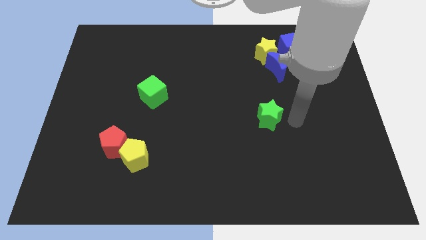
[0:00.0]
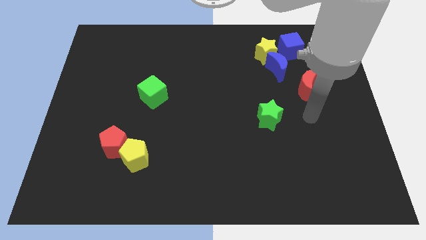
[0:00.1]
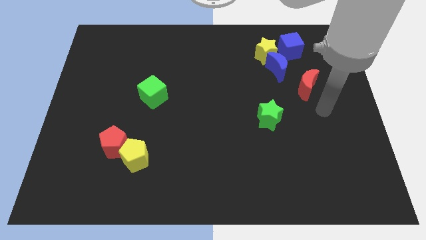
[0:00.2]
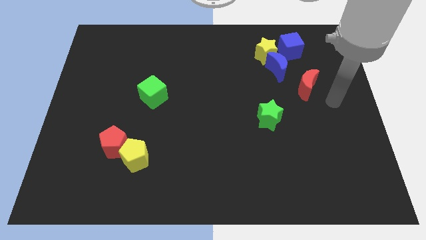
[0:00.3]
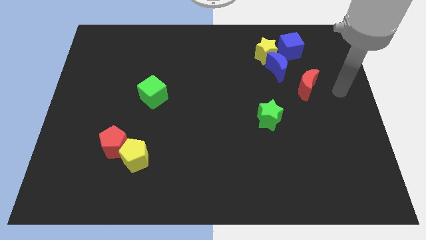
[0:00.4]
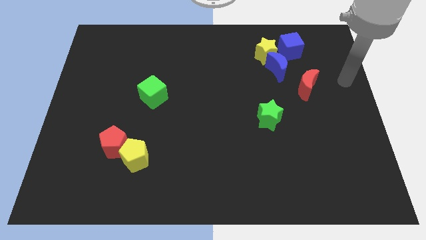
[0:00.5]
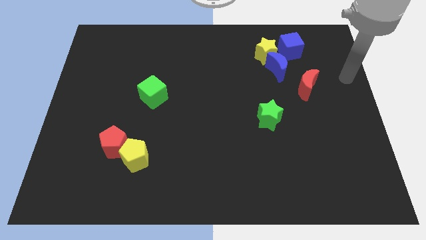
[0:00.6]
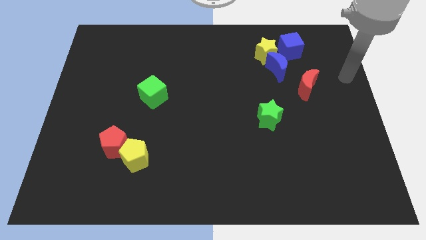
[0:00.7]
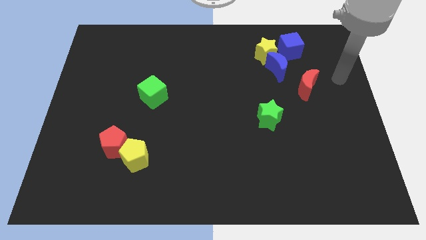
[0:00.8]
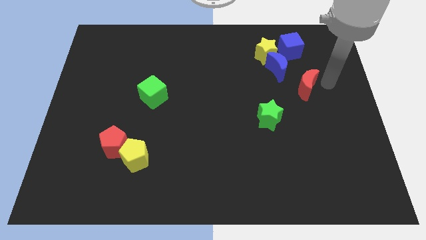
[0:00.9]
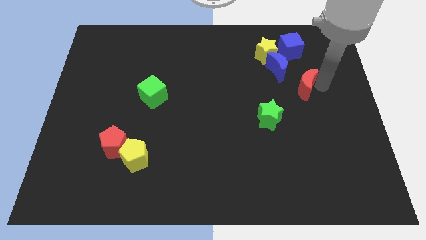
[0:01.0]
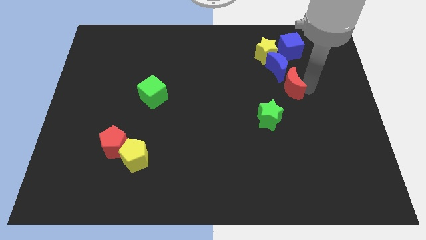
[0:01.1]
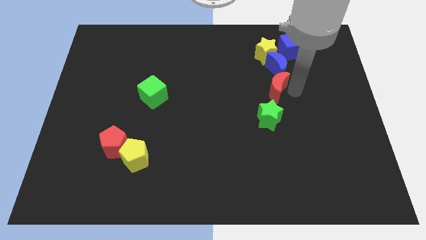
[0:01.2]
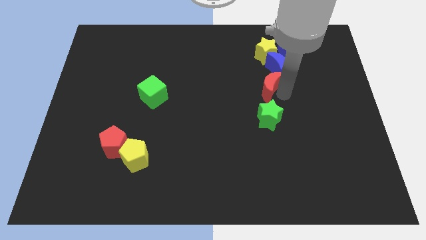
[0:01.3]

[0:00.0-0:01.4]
slide the red moon below the blue crescent

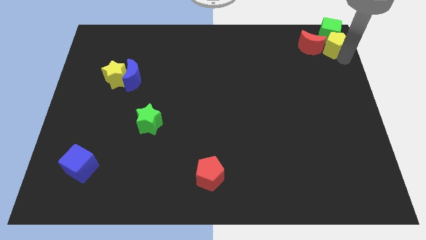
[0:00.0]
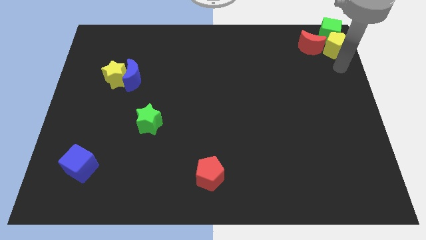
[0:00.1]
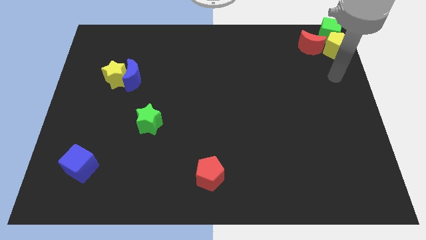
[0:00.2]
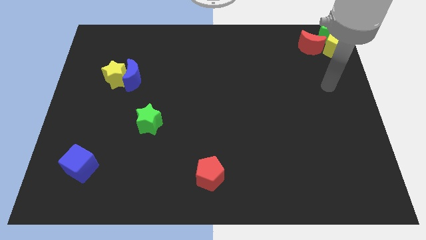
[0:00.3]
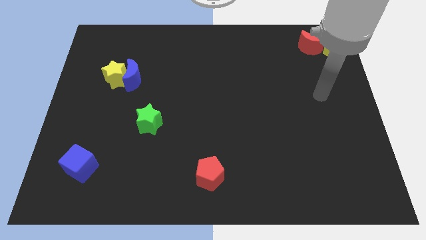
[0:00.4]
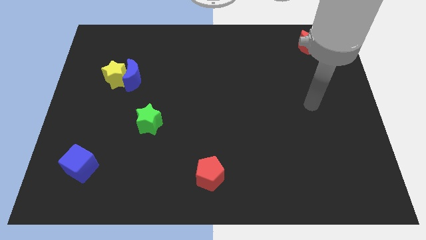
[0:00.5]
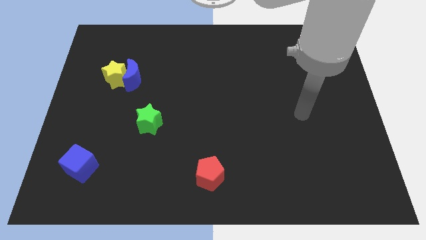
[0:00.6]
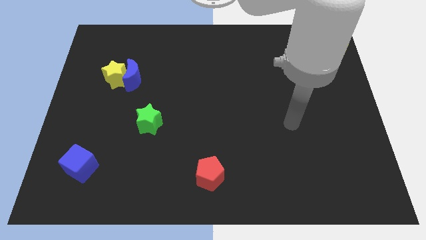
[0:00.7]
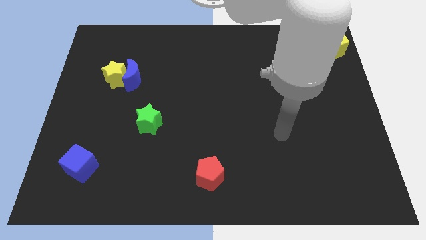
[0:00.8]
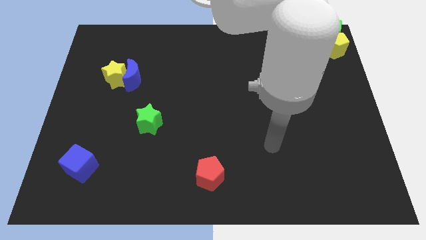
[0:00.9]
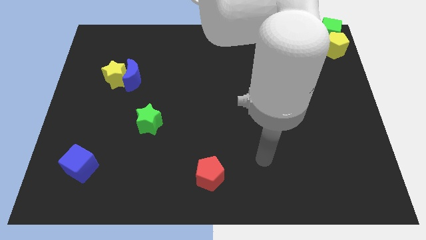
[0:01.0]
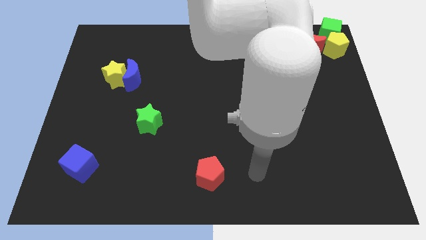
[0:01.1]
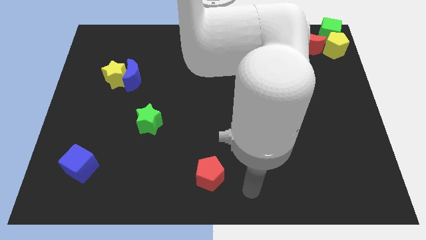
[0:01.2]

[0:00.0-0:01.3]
move your arm away from yellow pentagon

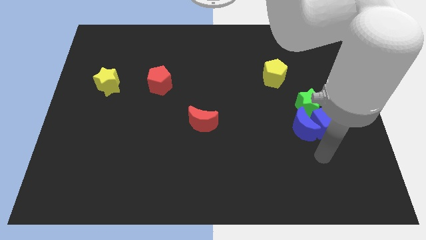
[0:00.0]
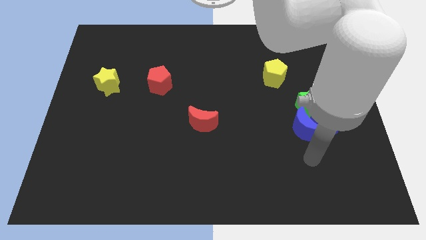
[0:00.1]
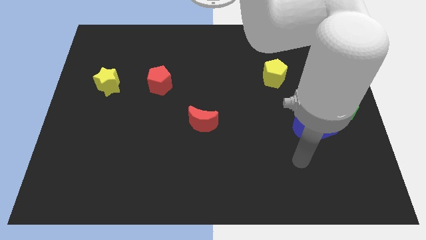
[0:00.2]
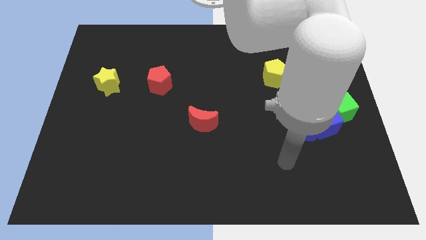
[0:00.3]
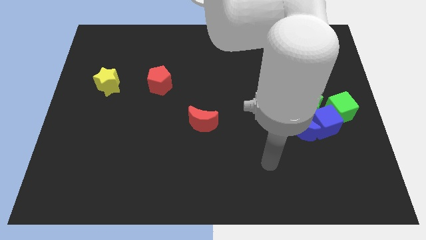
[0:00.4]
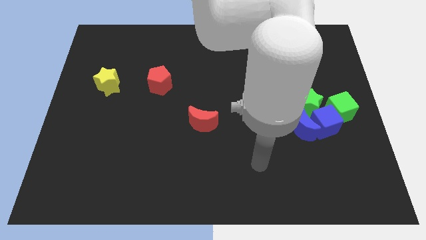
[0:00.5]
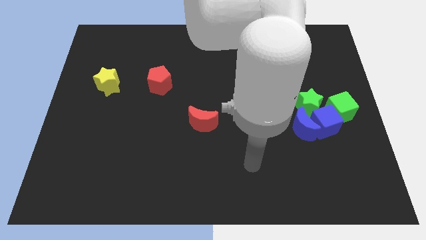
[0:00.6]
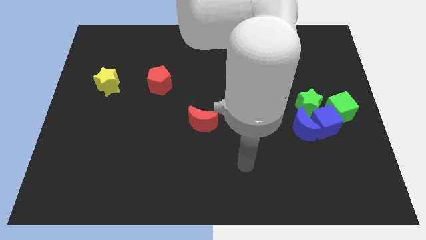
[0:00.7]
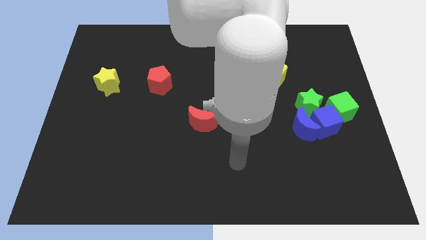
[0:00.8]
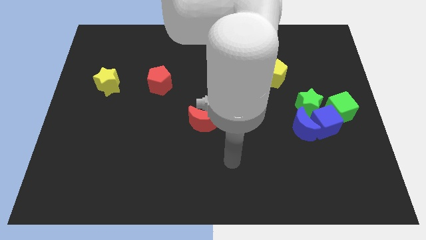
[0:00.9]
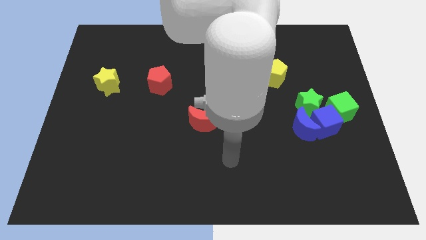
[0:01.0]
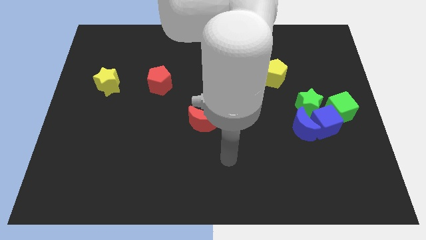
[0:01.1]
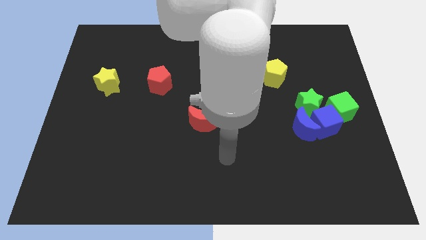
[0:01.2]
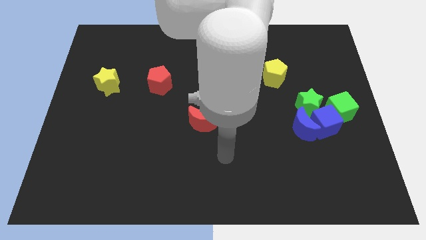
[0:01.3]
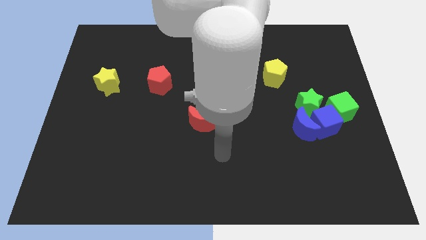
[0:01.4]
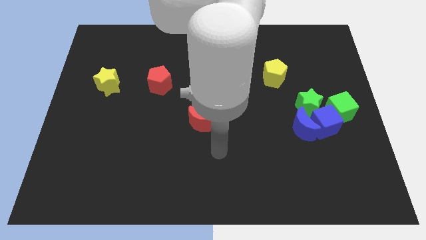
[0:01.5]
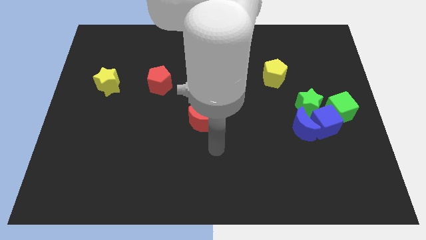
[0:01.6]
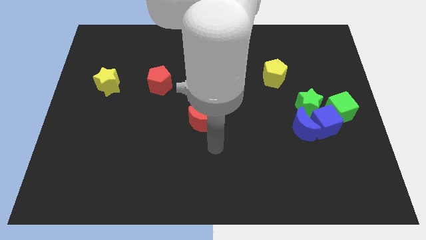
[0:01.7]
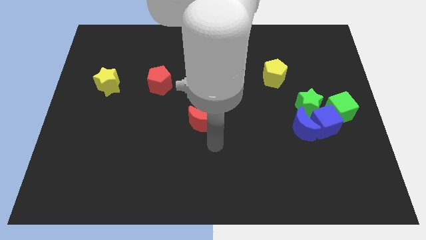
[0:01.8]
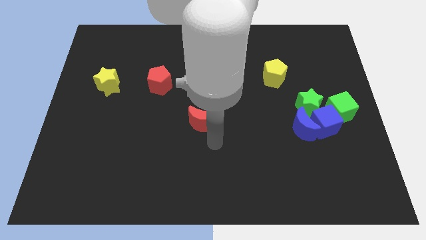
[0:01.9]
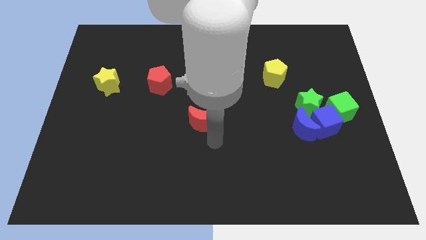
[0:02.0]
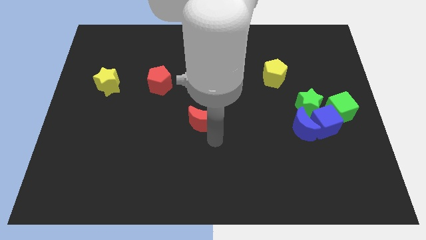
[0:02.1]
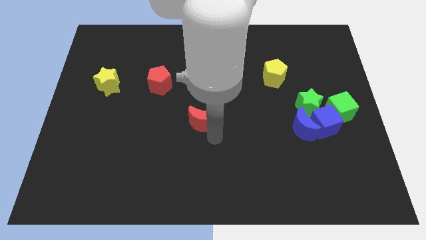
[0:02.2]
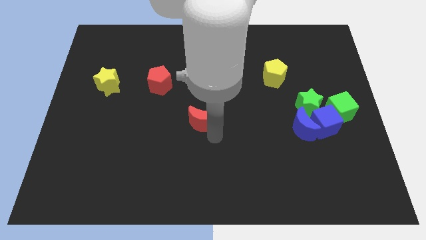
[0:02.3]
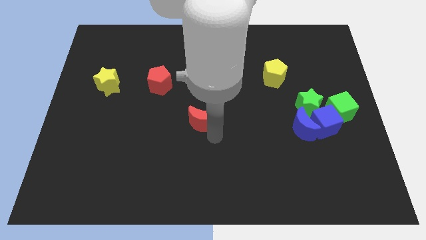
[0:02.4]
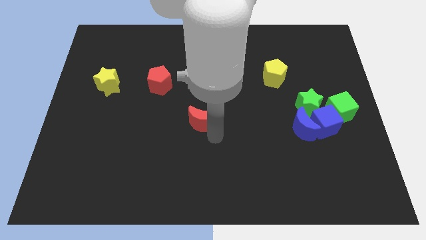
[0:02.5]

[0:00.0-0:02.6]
move the arm below the red crescent

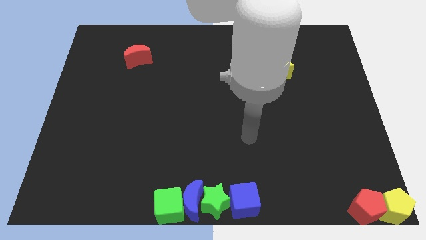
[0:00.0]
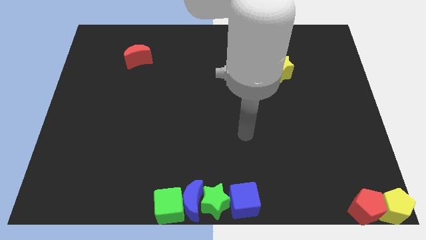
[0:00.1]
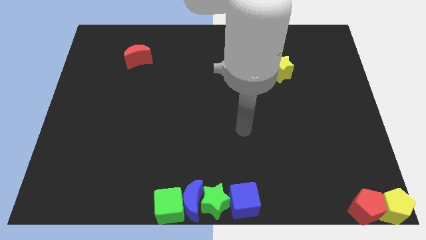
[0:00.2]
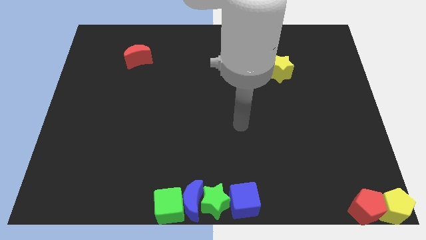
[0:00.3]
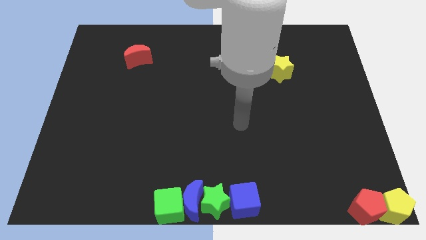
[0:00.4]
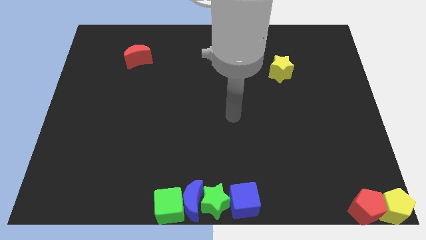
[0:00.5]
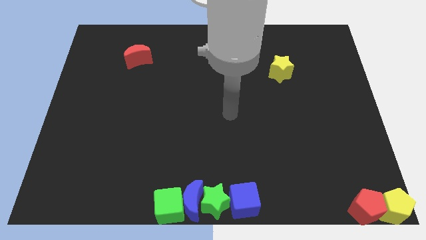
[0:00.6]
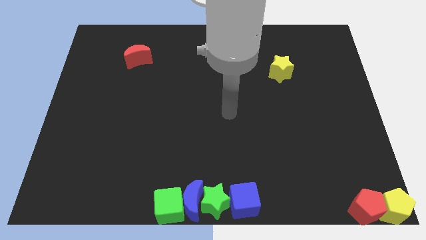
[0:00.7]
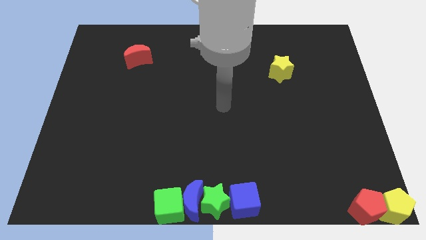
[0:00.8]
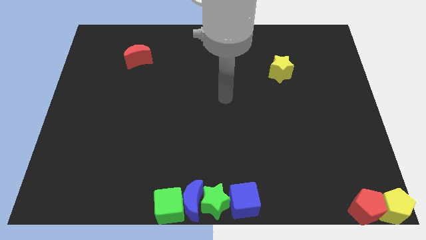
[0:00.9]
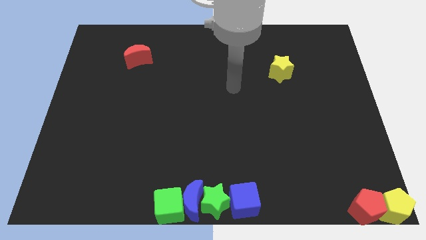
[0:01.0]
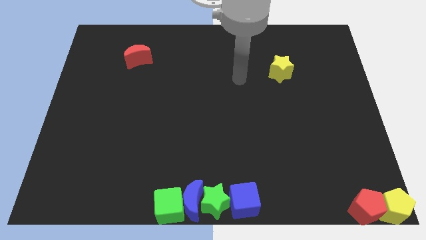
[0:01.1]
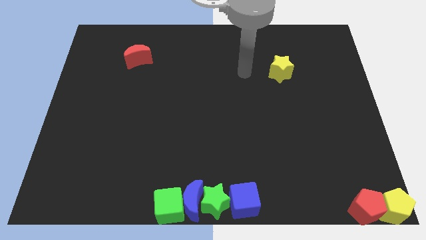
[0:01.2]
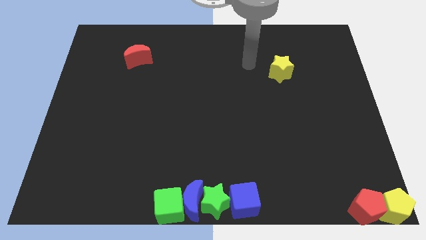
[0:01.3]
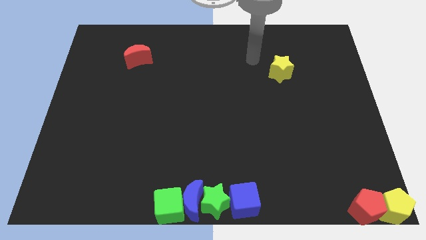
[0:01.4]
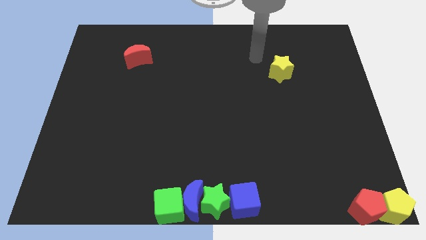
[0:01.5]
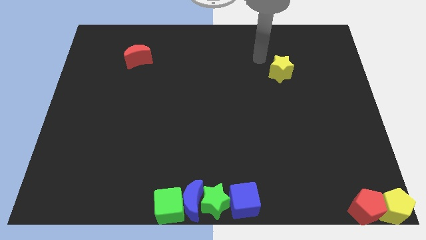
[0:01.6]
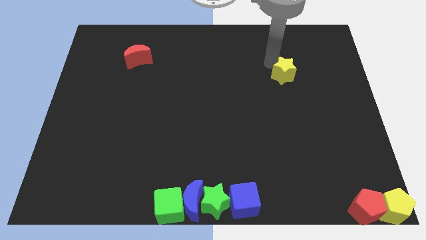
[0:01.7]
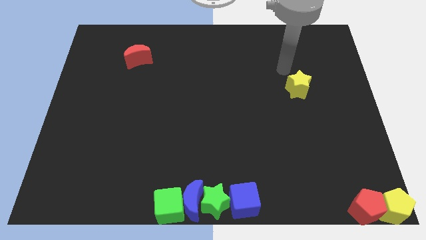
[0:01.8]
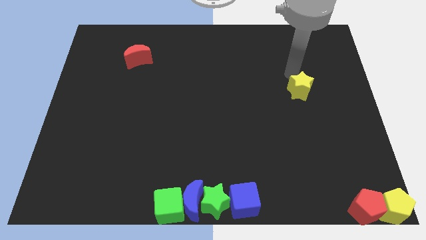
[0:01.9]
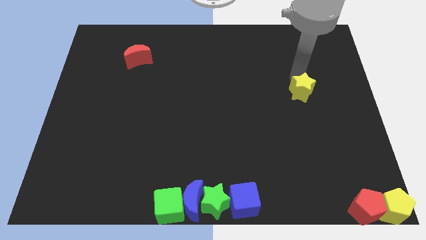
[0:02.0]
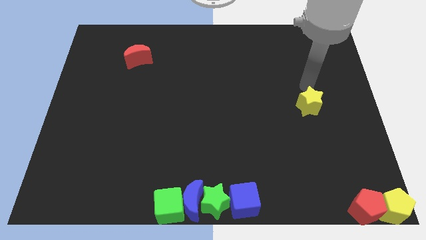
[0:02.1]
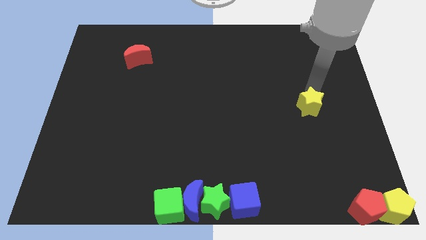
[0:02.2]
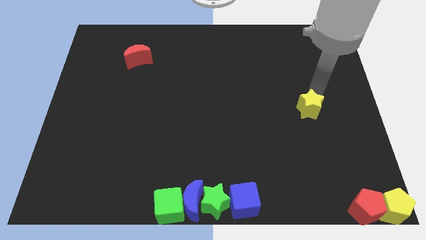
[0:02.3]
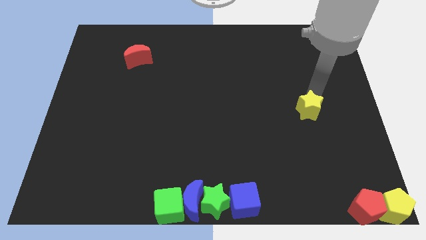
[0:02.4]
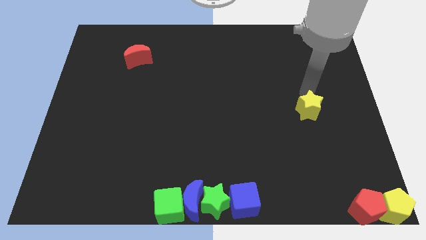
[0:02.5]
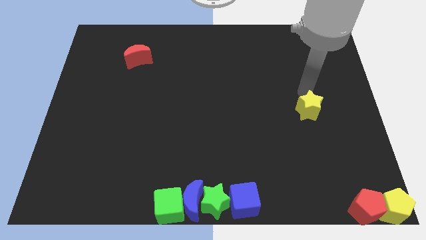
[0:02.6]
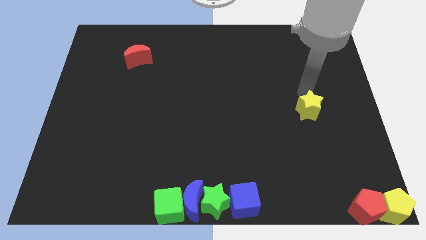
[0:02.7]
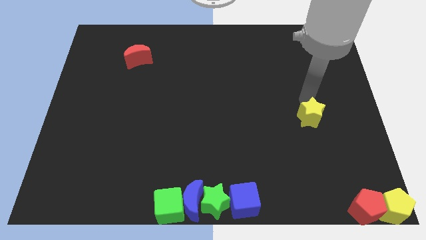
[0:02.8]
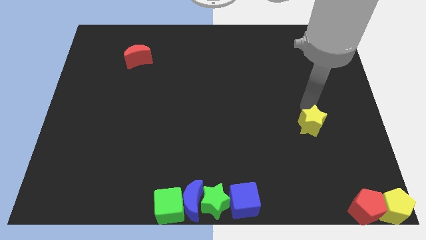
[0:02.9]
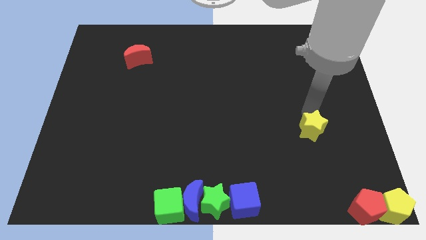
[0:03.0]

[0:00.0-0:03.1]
place the yellow star diagonal to the blue cube

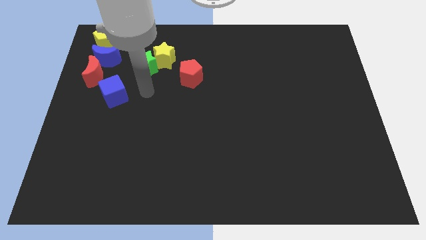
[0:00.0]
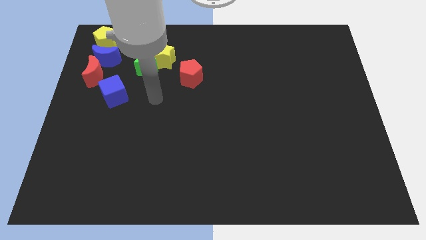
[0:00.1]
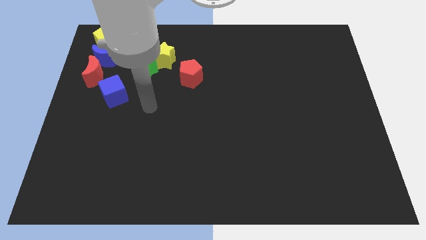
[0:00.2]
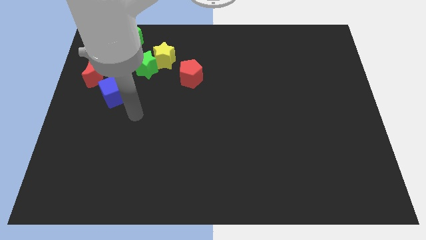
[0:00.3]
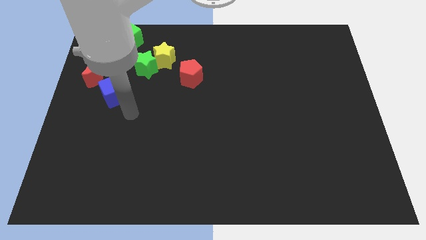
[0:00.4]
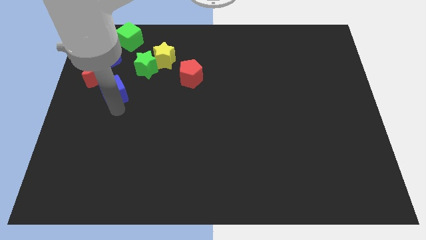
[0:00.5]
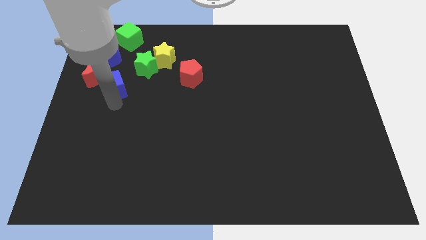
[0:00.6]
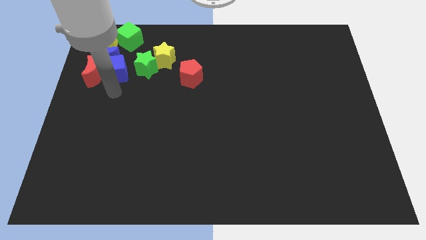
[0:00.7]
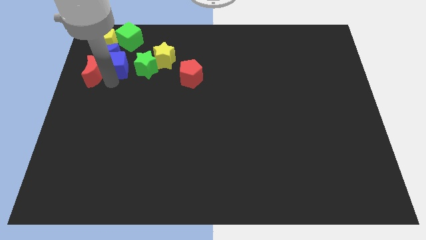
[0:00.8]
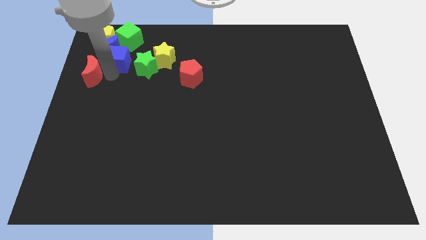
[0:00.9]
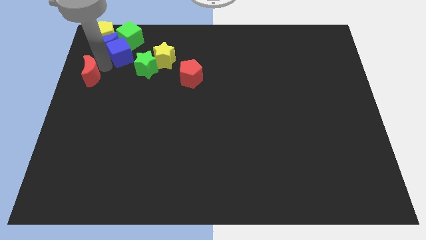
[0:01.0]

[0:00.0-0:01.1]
push the blue cube into the blue moon
